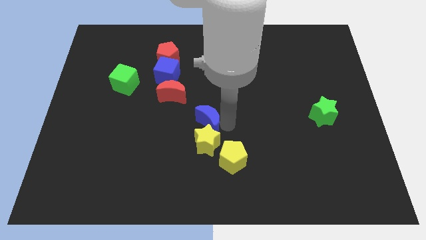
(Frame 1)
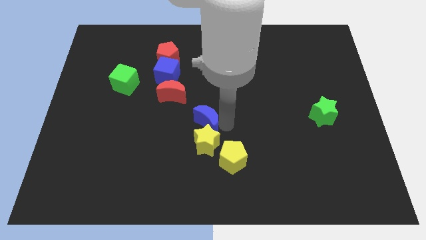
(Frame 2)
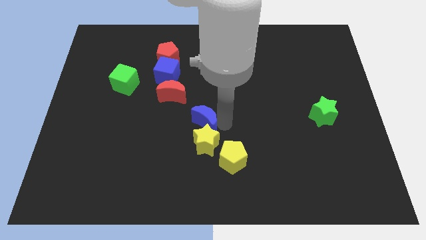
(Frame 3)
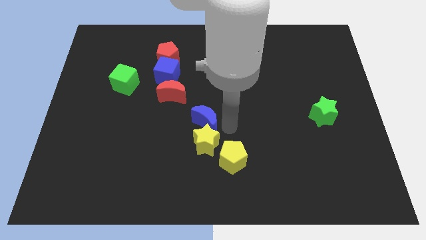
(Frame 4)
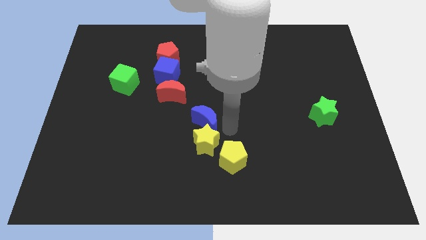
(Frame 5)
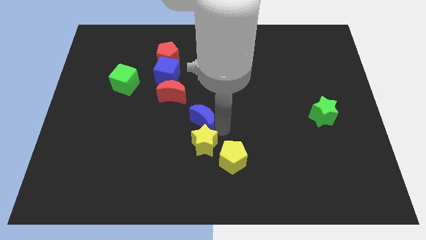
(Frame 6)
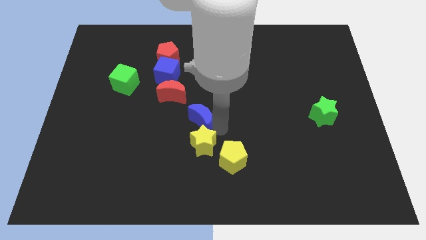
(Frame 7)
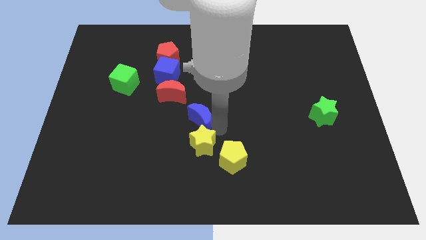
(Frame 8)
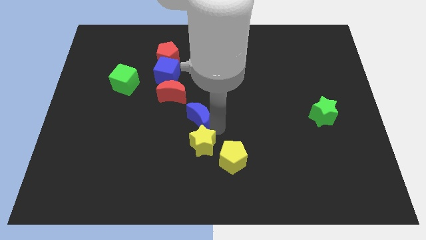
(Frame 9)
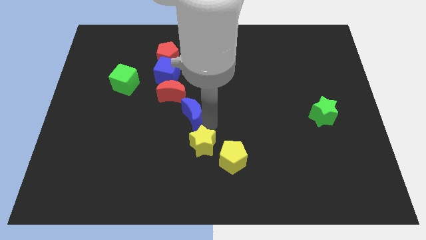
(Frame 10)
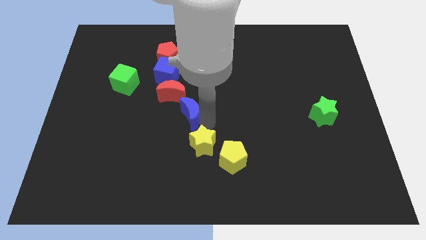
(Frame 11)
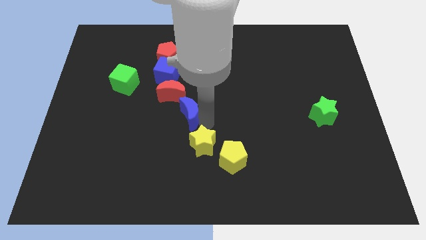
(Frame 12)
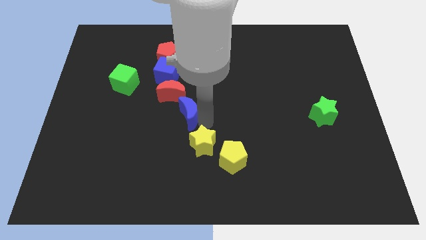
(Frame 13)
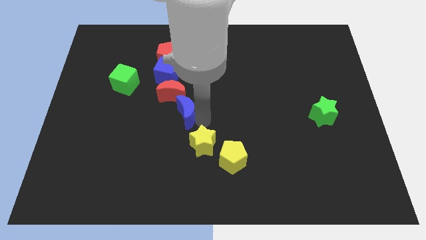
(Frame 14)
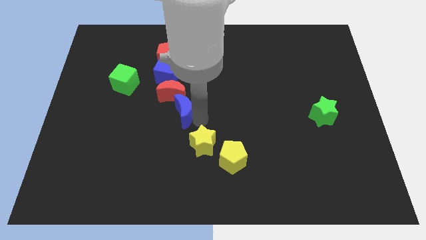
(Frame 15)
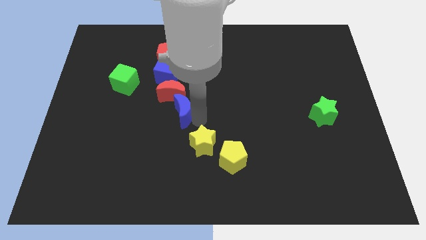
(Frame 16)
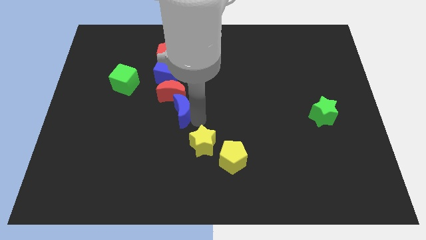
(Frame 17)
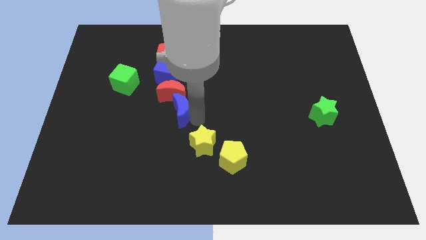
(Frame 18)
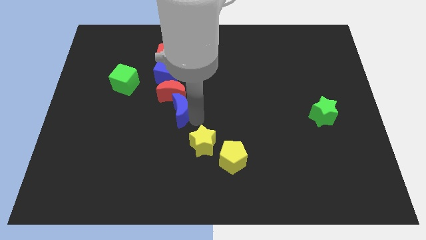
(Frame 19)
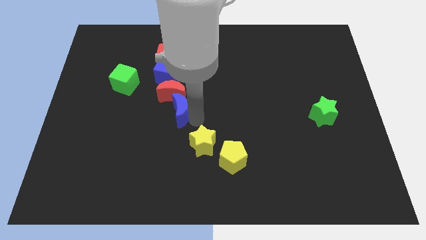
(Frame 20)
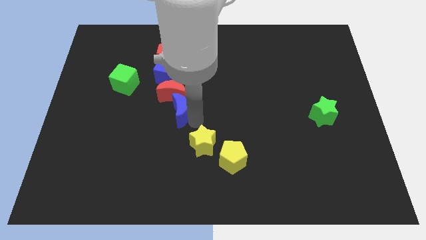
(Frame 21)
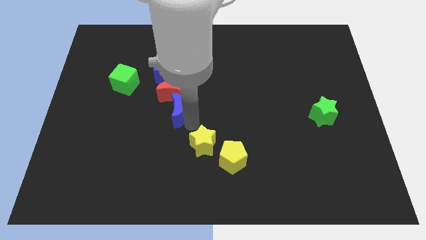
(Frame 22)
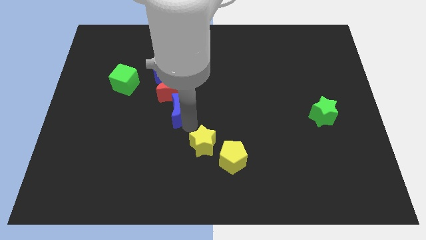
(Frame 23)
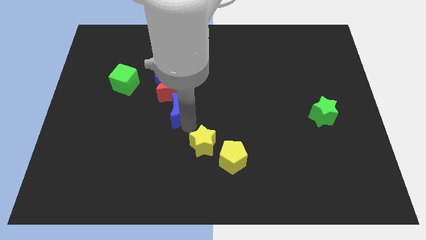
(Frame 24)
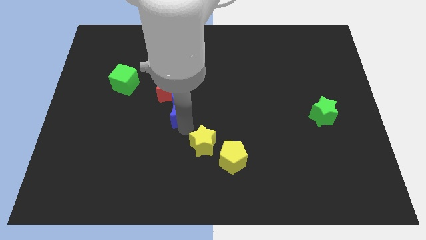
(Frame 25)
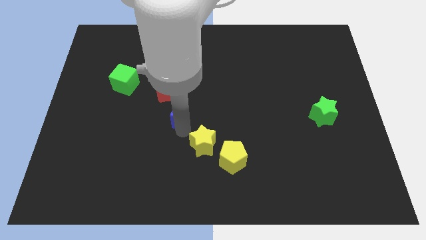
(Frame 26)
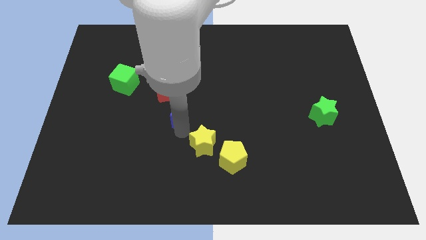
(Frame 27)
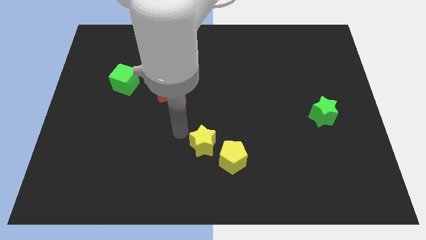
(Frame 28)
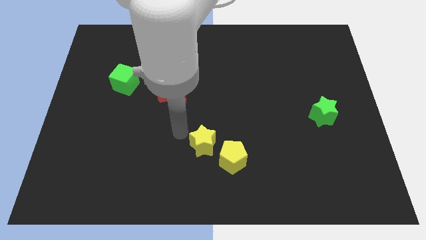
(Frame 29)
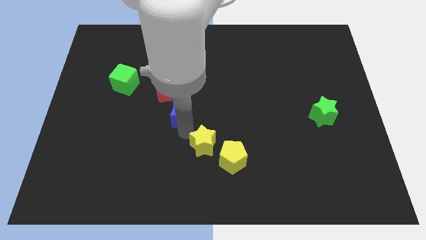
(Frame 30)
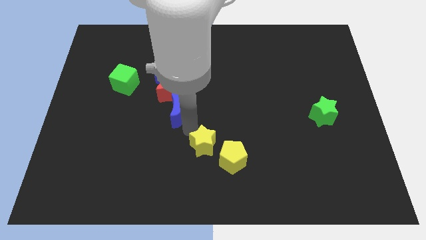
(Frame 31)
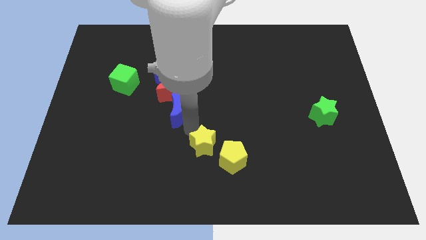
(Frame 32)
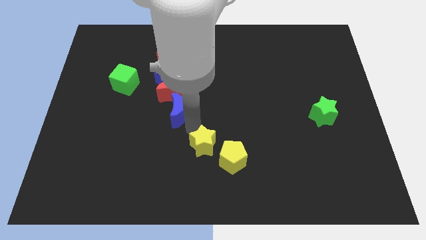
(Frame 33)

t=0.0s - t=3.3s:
move the blue crescent towards the bottom side of the red crescent

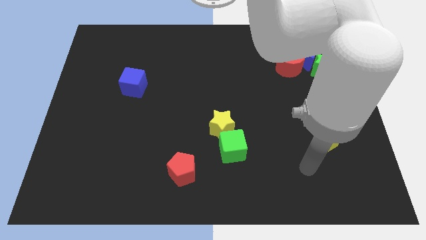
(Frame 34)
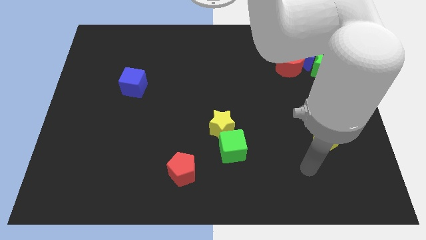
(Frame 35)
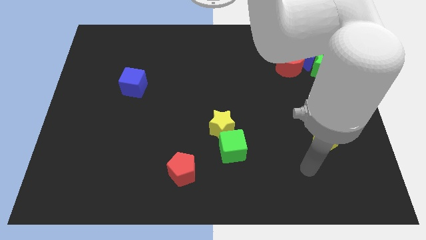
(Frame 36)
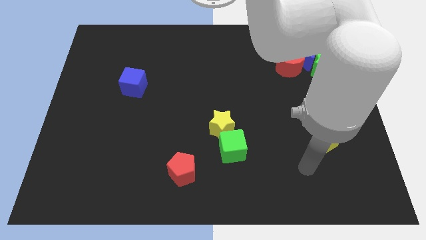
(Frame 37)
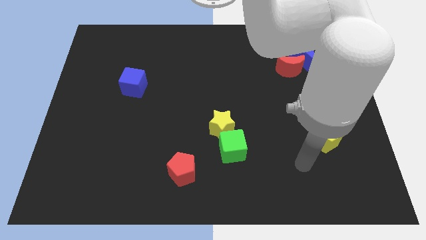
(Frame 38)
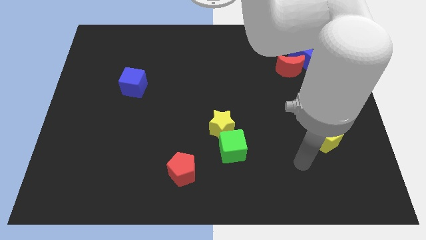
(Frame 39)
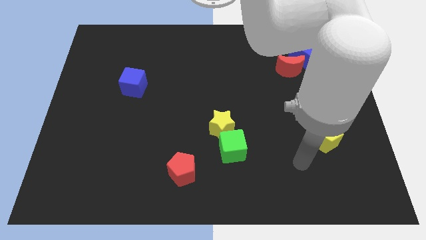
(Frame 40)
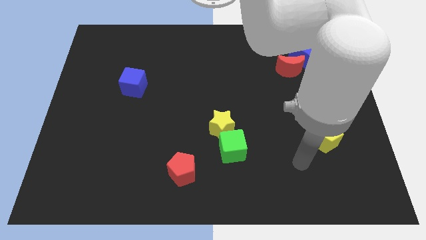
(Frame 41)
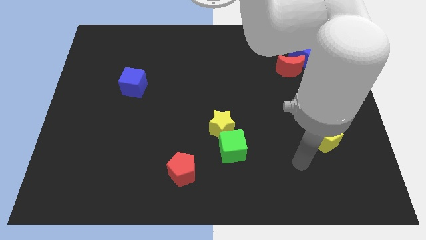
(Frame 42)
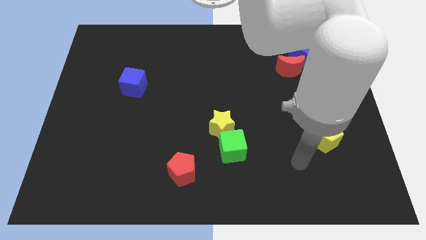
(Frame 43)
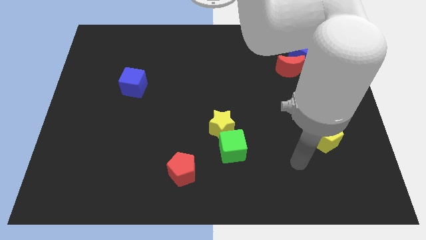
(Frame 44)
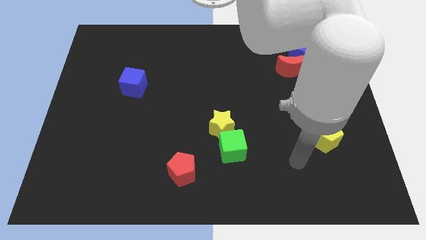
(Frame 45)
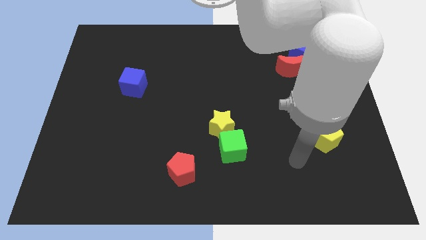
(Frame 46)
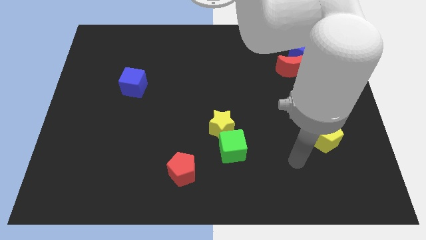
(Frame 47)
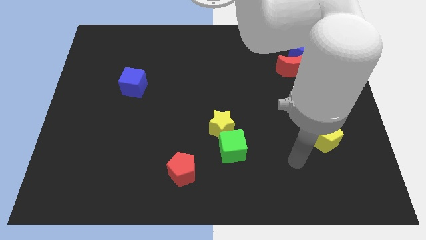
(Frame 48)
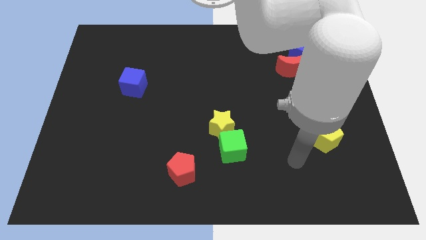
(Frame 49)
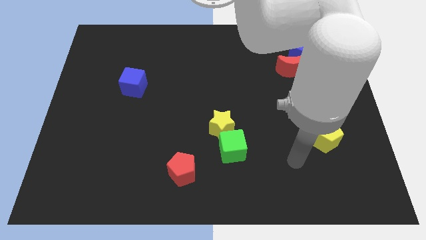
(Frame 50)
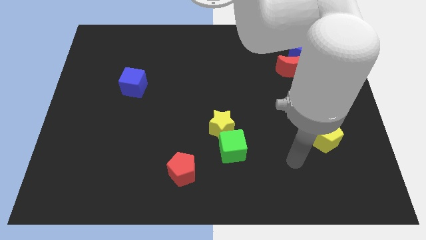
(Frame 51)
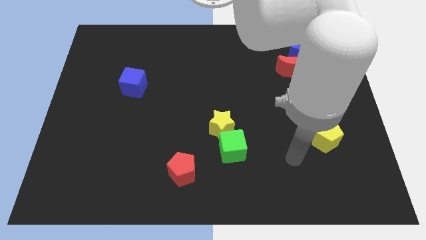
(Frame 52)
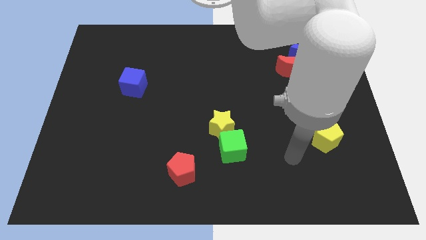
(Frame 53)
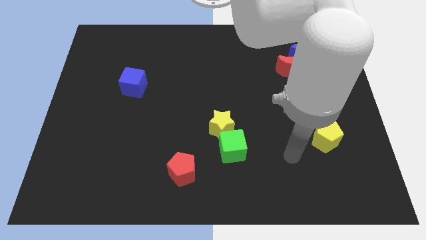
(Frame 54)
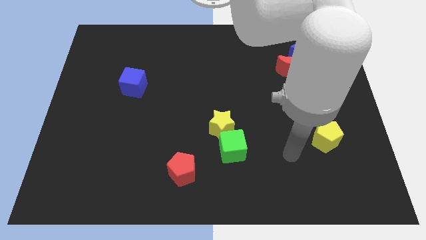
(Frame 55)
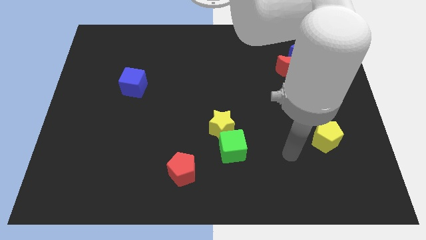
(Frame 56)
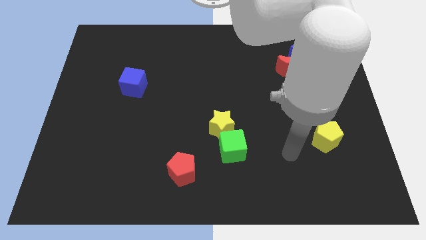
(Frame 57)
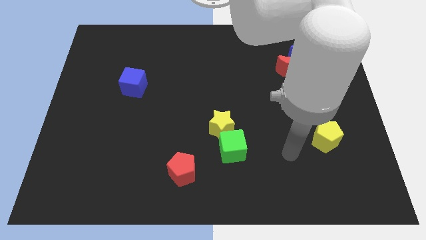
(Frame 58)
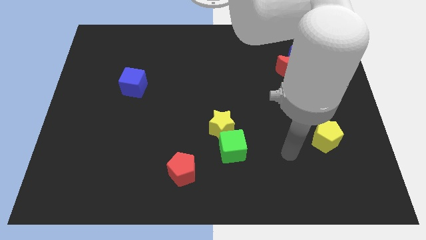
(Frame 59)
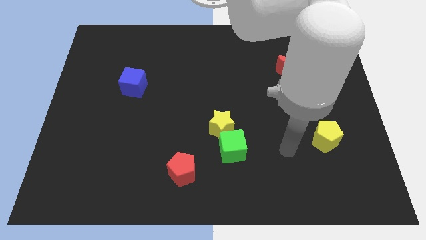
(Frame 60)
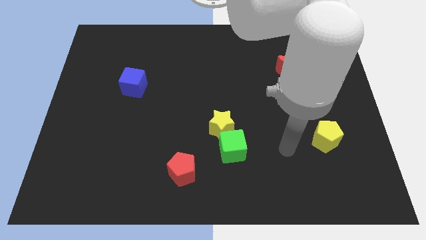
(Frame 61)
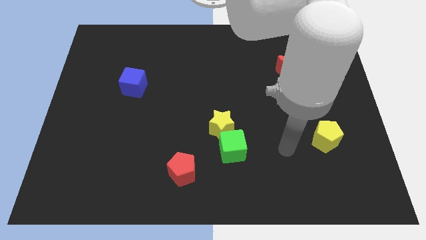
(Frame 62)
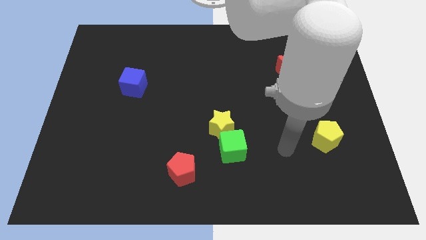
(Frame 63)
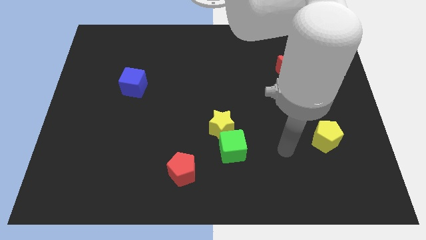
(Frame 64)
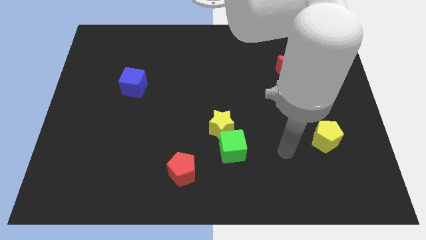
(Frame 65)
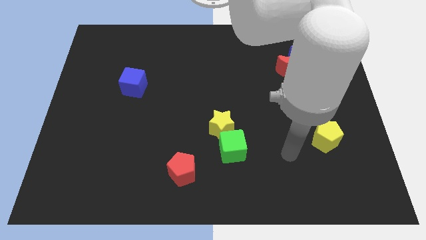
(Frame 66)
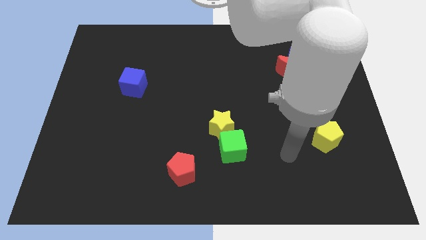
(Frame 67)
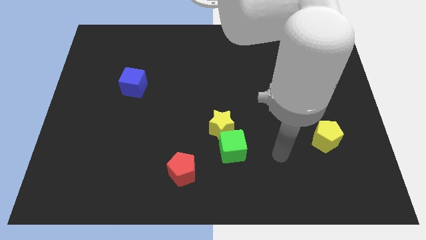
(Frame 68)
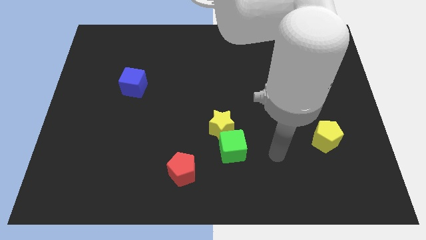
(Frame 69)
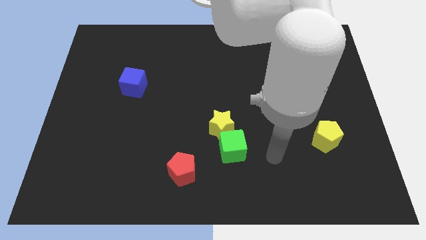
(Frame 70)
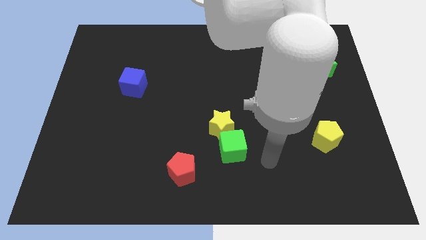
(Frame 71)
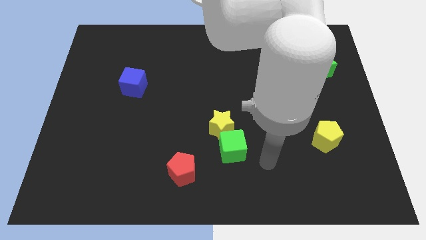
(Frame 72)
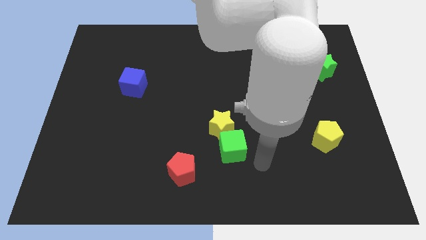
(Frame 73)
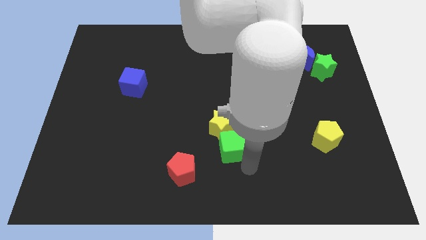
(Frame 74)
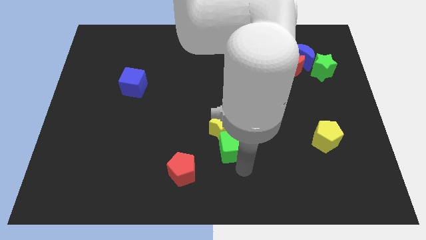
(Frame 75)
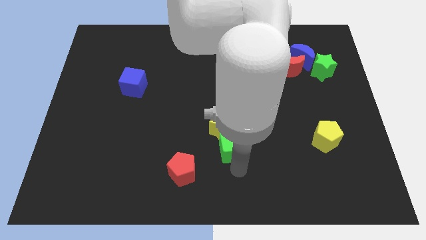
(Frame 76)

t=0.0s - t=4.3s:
place your arm below the green cuube

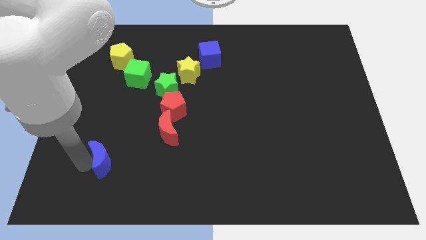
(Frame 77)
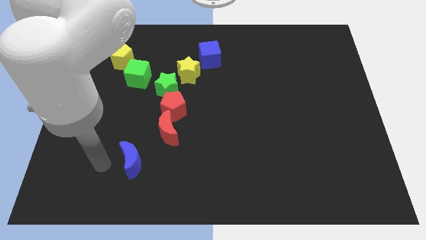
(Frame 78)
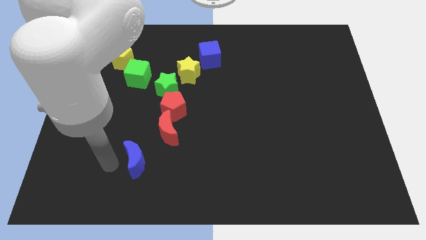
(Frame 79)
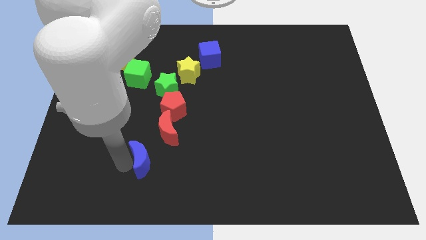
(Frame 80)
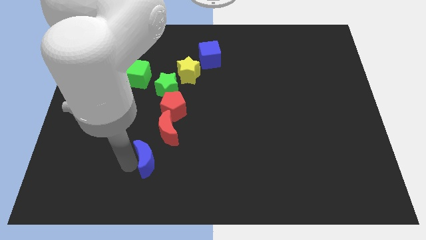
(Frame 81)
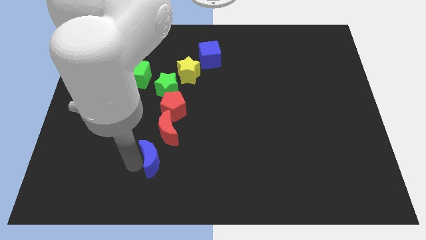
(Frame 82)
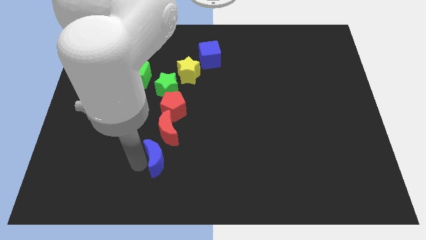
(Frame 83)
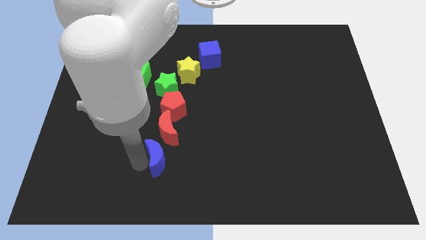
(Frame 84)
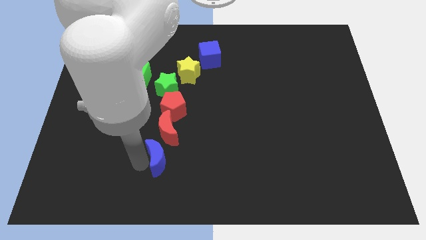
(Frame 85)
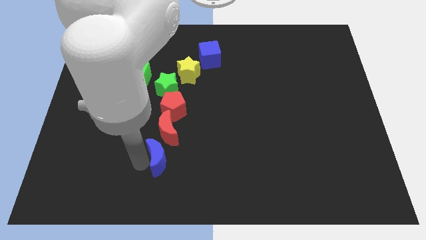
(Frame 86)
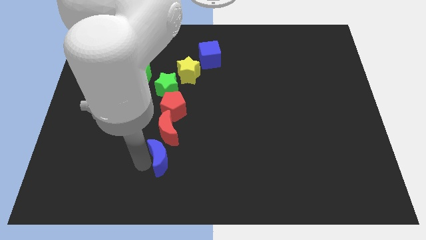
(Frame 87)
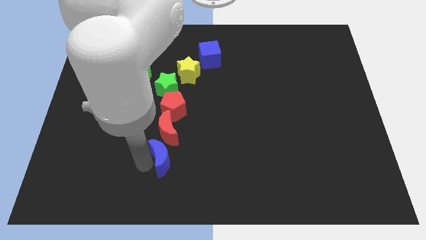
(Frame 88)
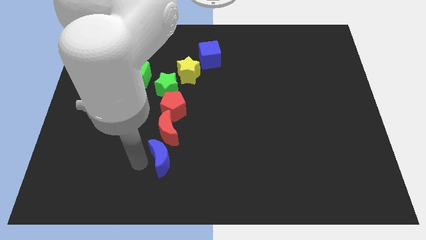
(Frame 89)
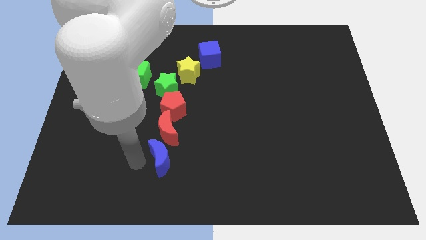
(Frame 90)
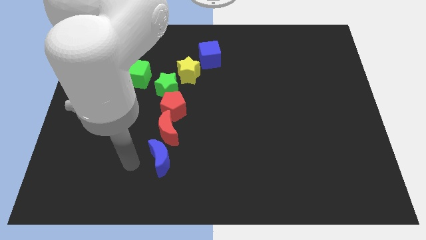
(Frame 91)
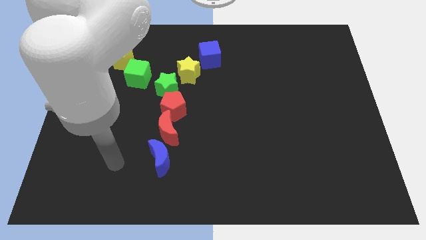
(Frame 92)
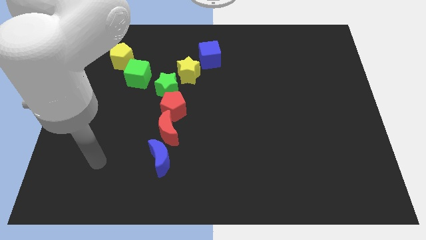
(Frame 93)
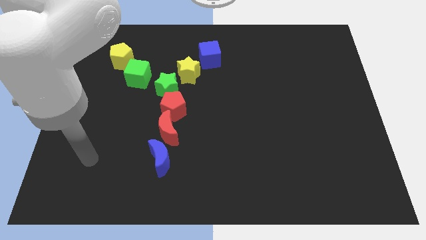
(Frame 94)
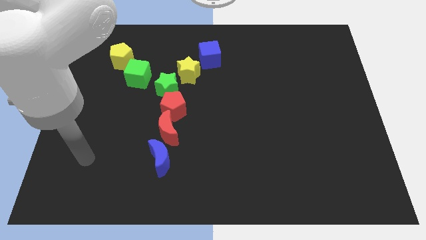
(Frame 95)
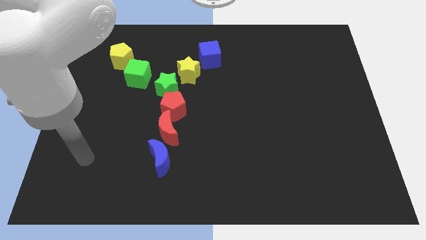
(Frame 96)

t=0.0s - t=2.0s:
push the blue crescent towards the bottom of the red crescent
